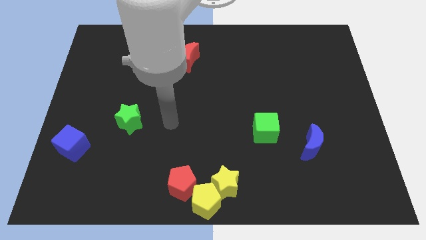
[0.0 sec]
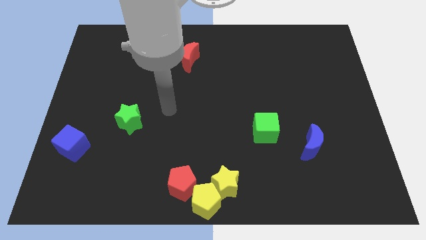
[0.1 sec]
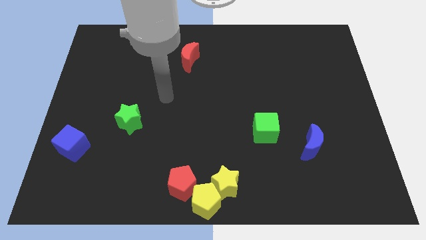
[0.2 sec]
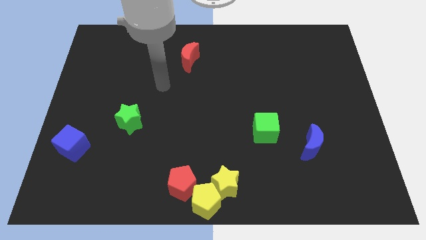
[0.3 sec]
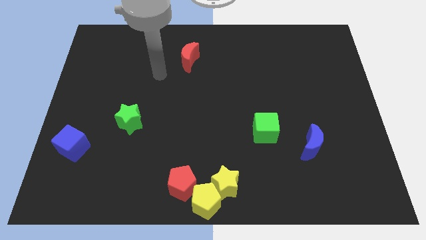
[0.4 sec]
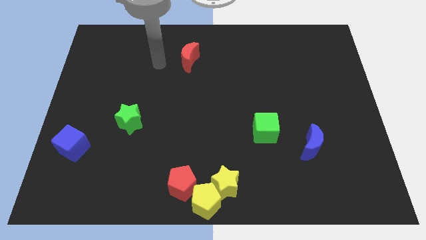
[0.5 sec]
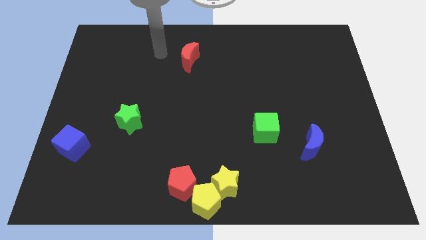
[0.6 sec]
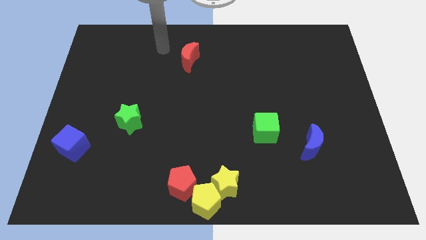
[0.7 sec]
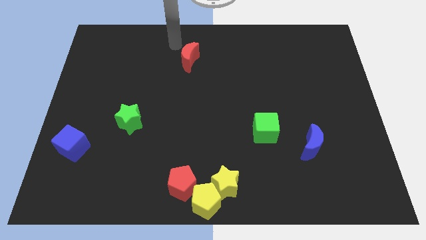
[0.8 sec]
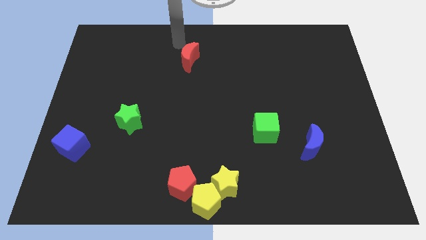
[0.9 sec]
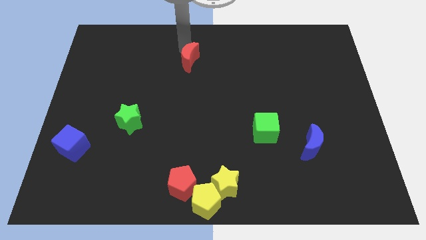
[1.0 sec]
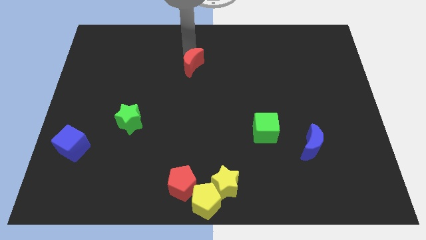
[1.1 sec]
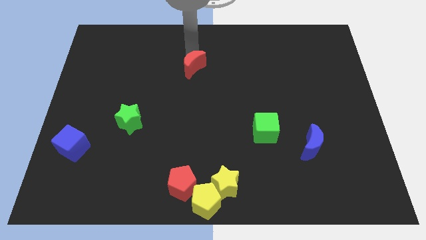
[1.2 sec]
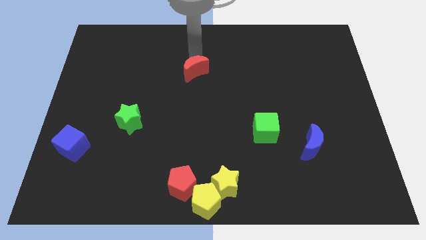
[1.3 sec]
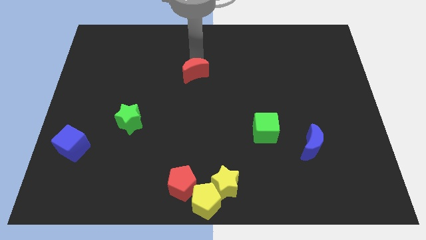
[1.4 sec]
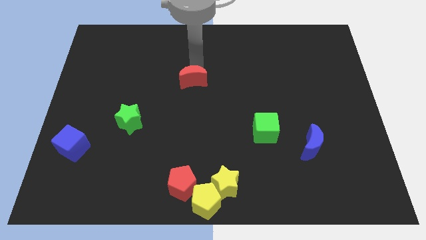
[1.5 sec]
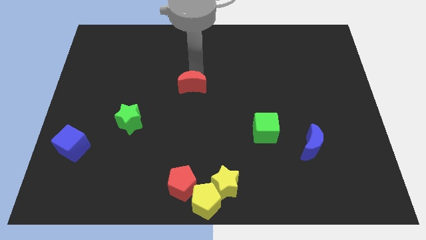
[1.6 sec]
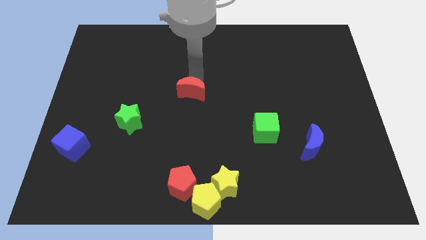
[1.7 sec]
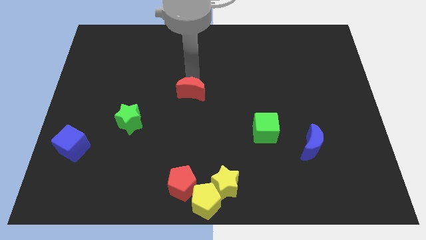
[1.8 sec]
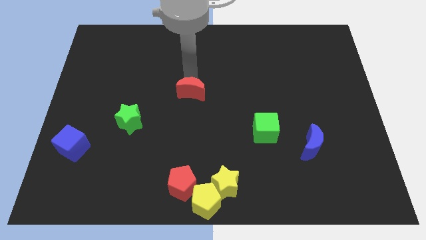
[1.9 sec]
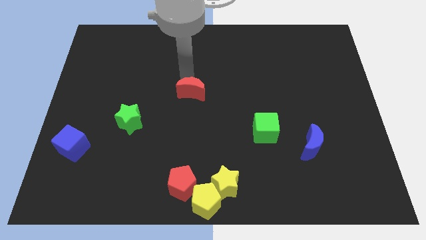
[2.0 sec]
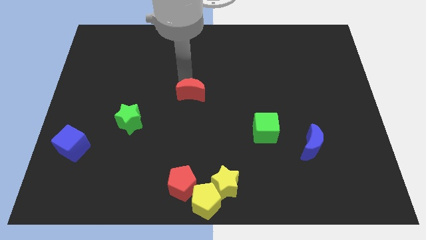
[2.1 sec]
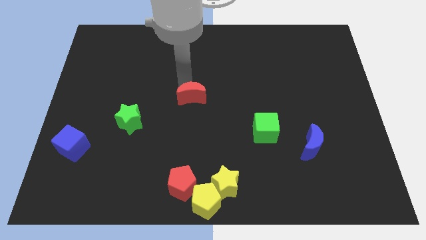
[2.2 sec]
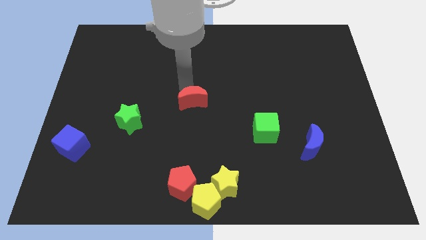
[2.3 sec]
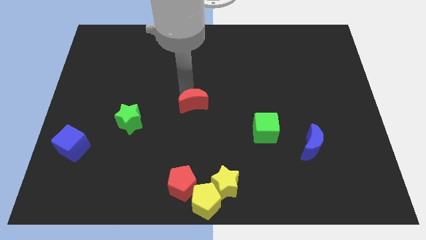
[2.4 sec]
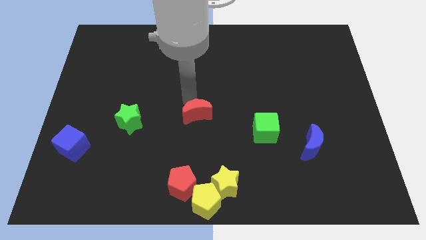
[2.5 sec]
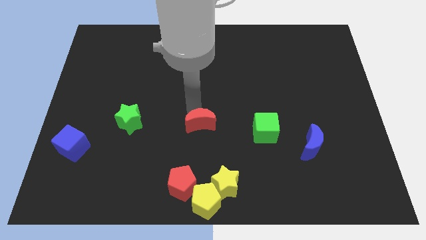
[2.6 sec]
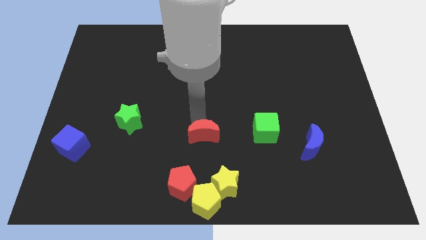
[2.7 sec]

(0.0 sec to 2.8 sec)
push the red moon in between the green star and green cube

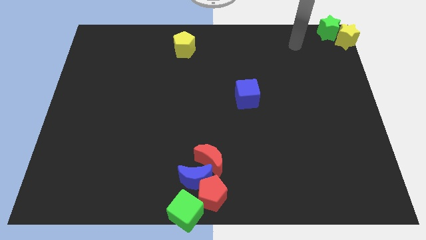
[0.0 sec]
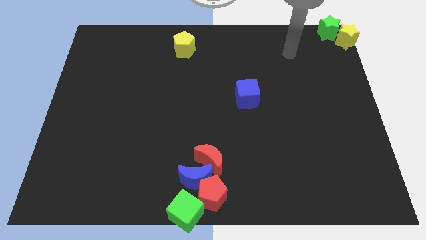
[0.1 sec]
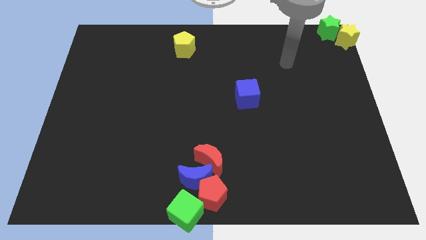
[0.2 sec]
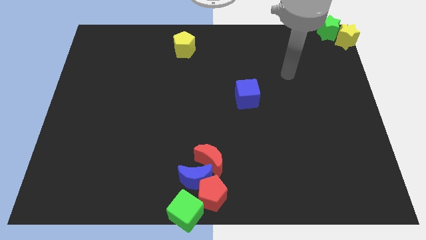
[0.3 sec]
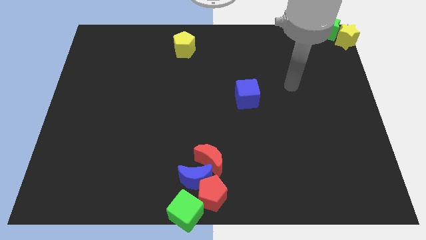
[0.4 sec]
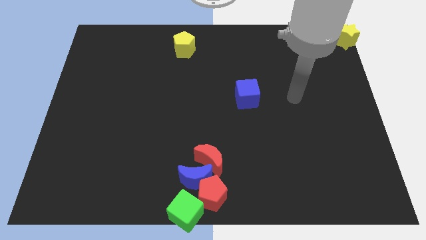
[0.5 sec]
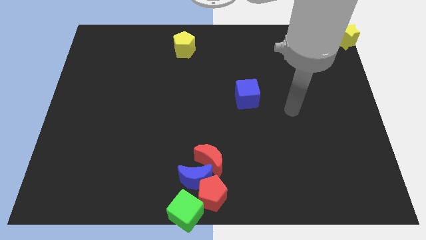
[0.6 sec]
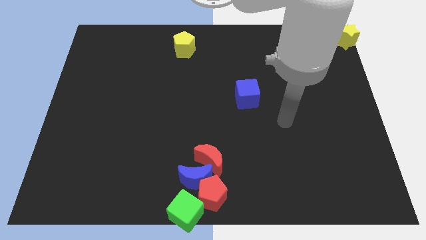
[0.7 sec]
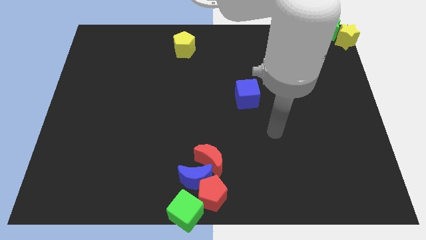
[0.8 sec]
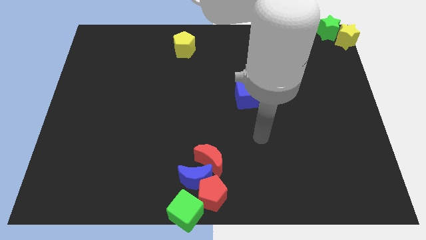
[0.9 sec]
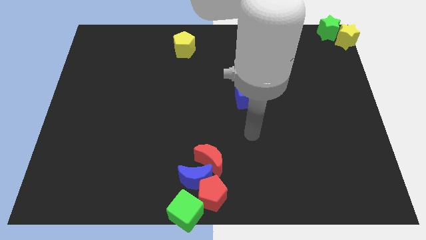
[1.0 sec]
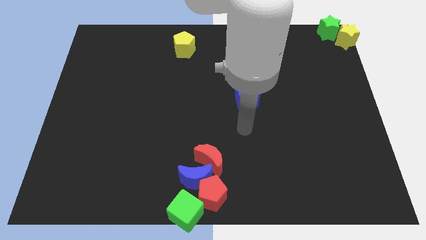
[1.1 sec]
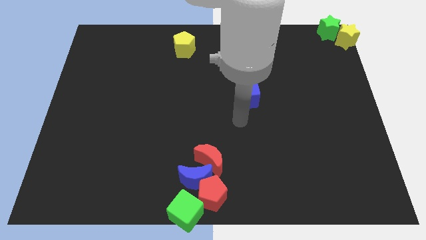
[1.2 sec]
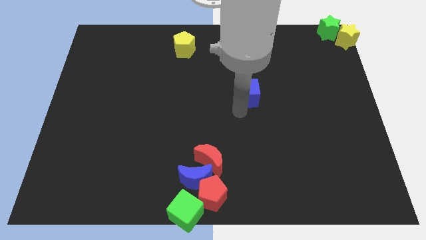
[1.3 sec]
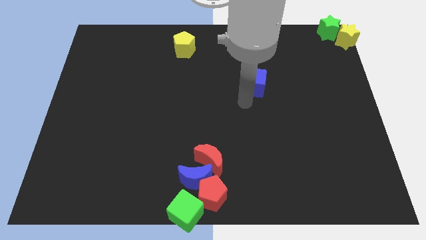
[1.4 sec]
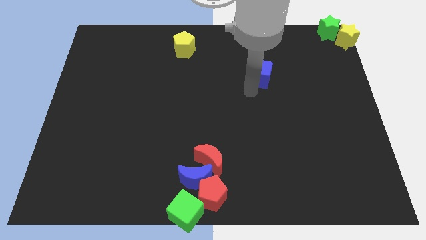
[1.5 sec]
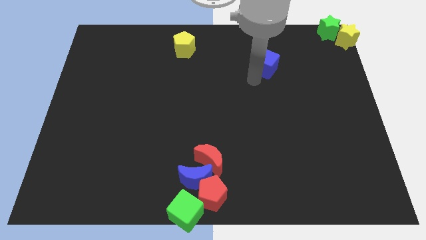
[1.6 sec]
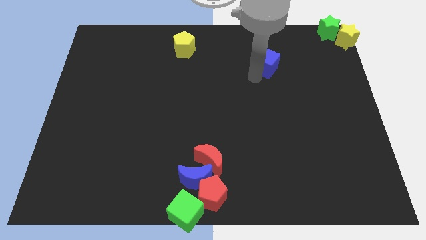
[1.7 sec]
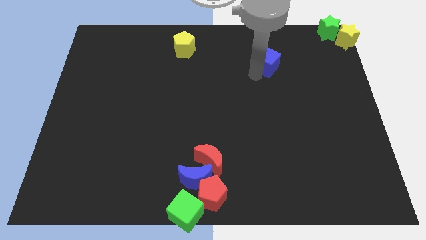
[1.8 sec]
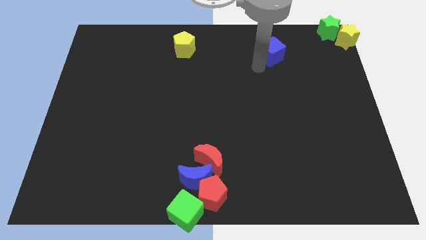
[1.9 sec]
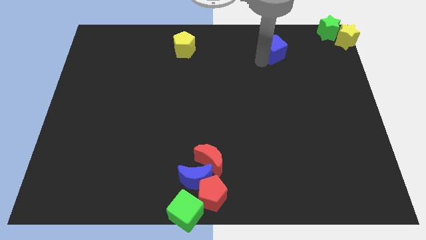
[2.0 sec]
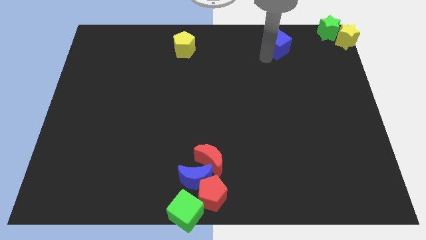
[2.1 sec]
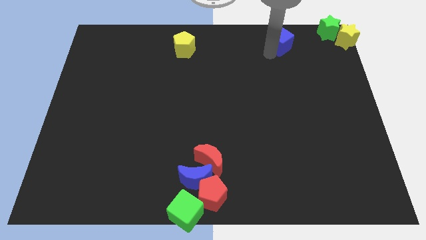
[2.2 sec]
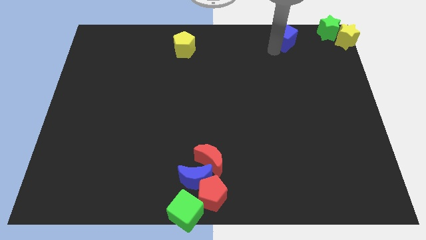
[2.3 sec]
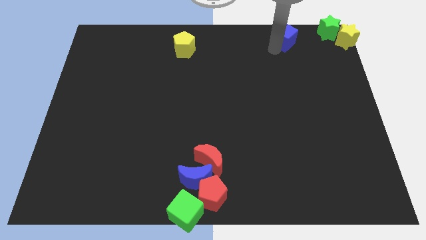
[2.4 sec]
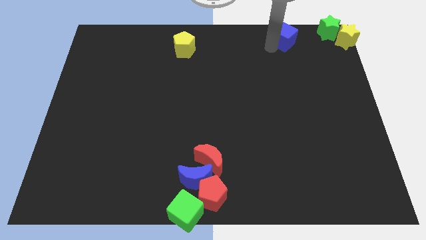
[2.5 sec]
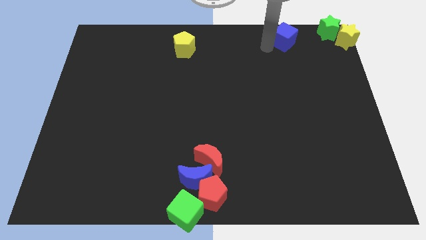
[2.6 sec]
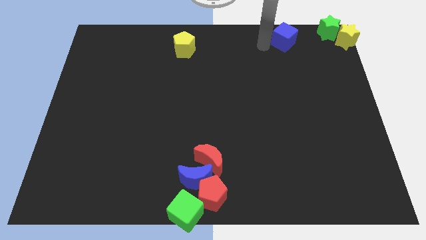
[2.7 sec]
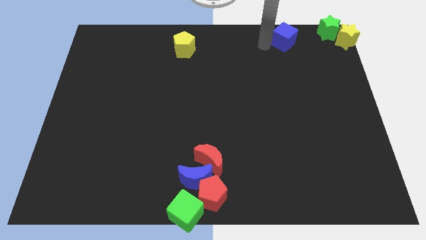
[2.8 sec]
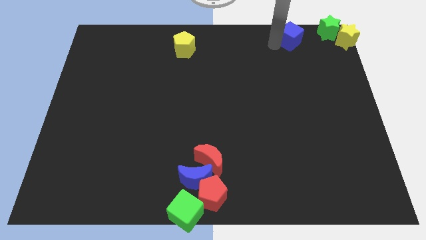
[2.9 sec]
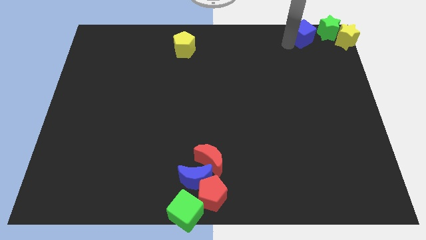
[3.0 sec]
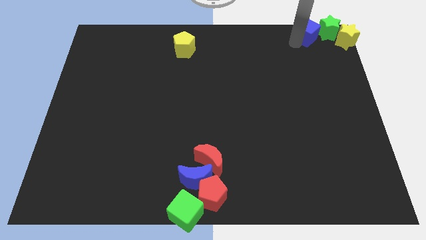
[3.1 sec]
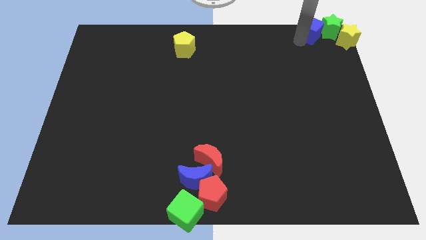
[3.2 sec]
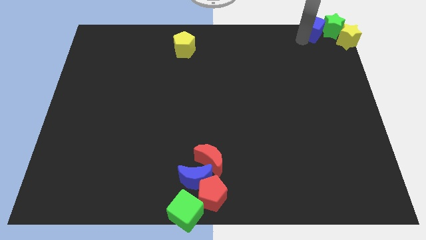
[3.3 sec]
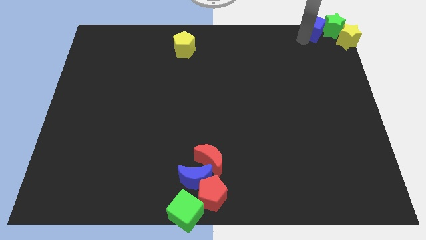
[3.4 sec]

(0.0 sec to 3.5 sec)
move the blue cube to the top right corner

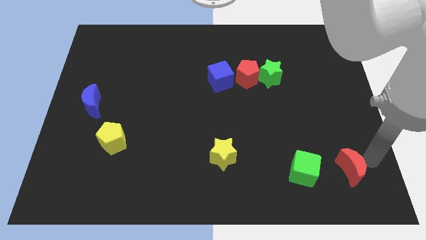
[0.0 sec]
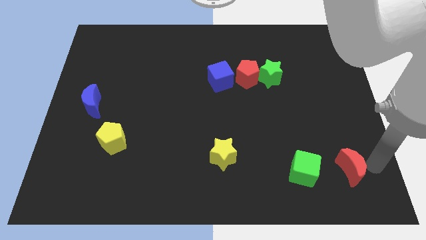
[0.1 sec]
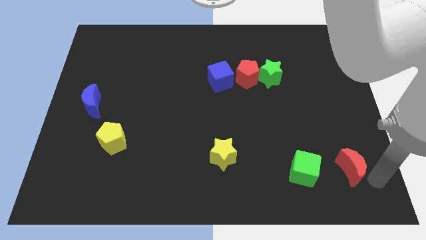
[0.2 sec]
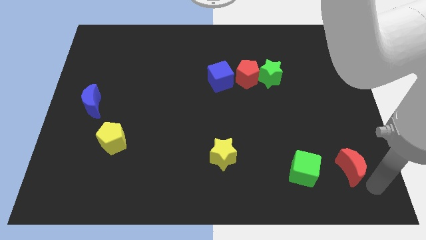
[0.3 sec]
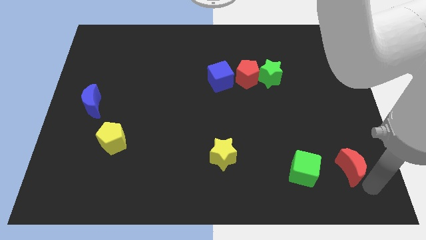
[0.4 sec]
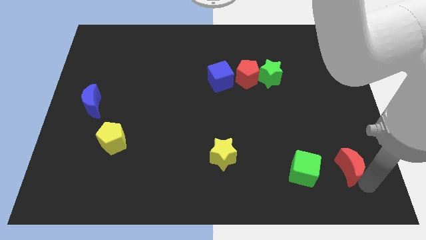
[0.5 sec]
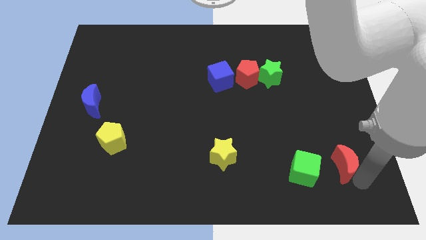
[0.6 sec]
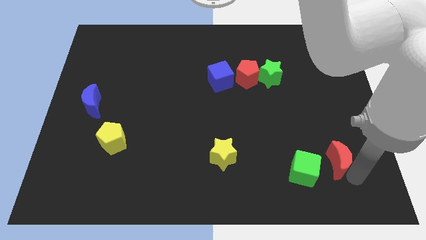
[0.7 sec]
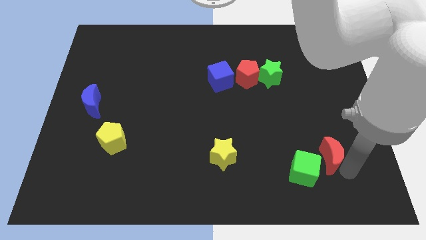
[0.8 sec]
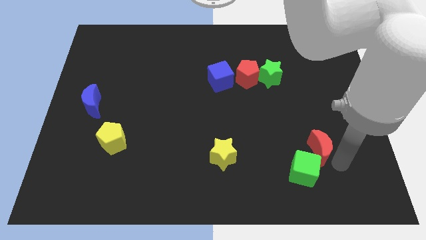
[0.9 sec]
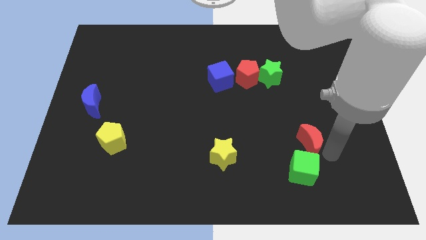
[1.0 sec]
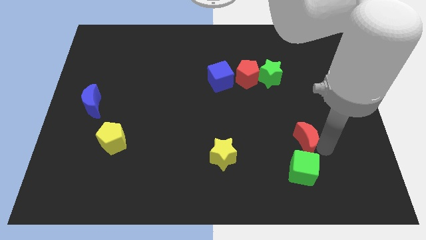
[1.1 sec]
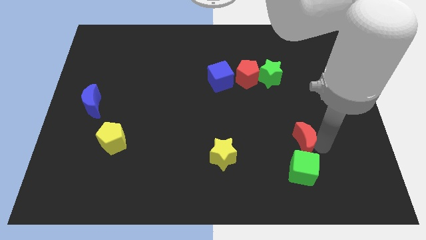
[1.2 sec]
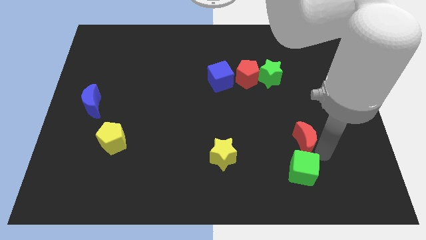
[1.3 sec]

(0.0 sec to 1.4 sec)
push the red crescent to the top of green cube

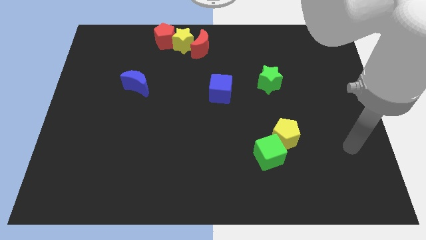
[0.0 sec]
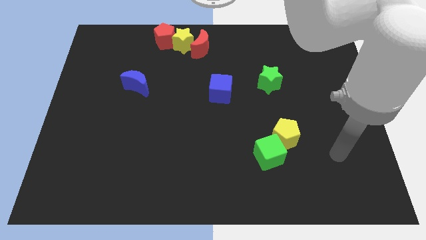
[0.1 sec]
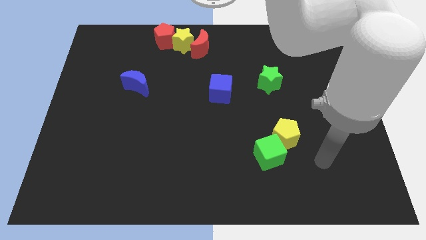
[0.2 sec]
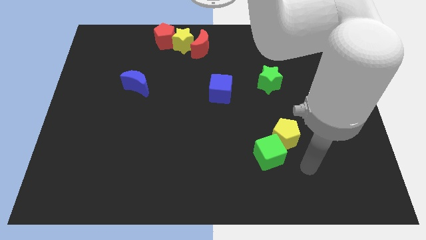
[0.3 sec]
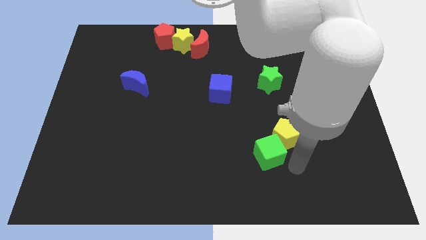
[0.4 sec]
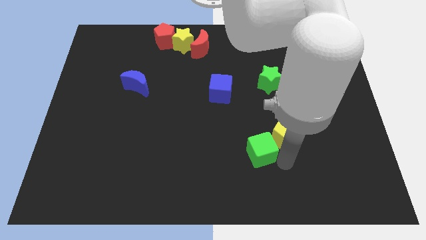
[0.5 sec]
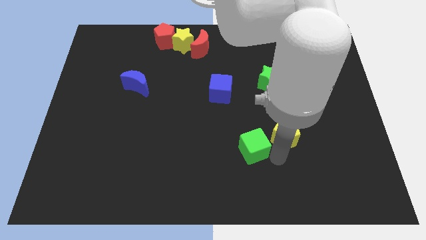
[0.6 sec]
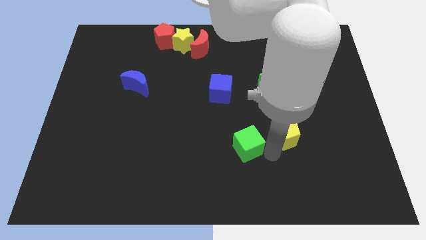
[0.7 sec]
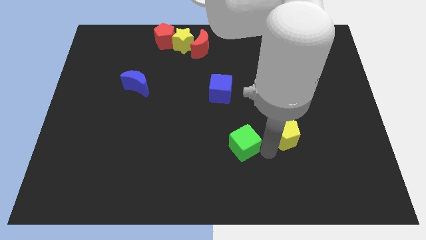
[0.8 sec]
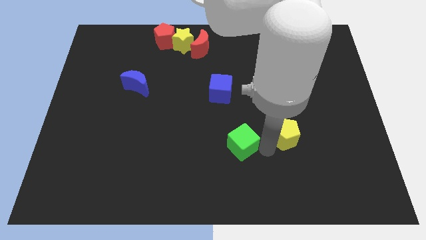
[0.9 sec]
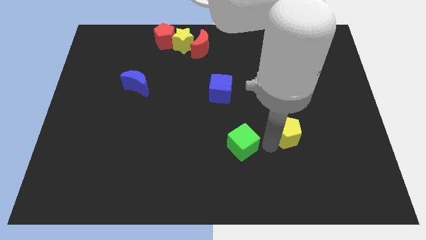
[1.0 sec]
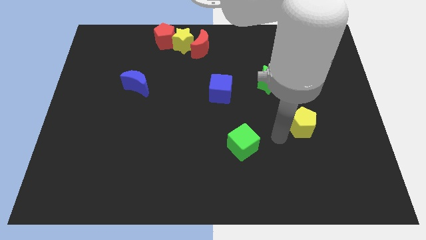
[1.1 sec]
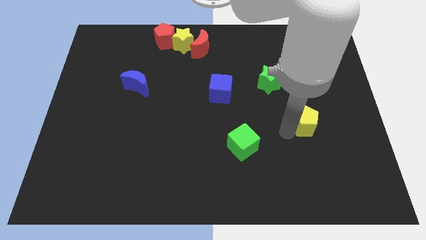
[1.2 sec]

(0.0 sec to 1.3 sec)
separate the green cube from the yellow pentagon
